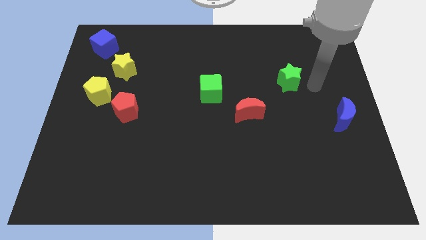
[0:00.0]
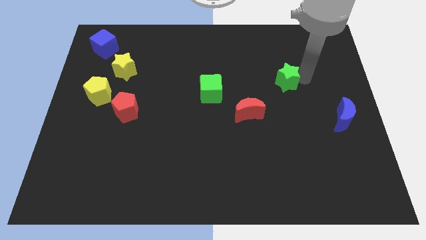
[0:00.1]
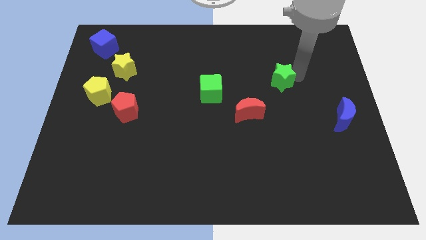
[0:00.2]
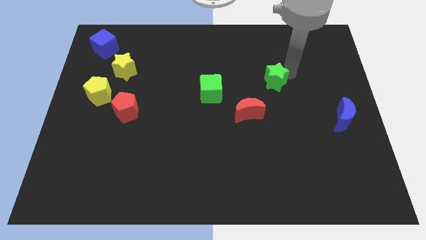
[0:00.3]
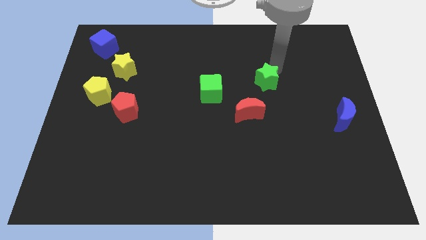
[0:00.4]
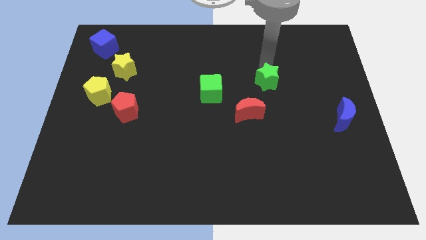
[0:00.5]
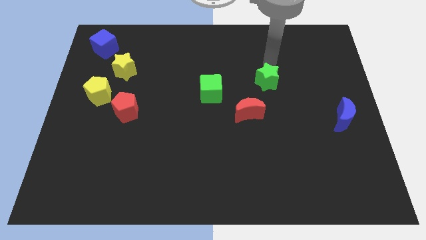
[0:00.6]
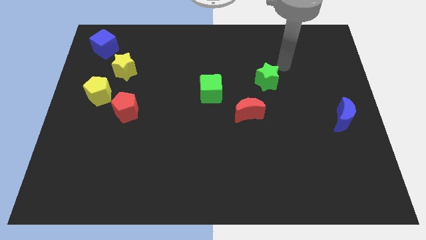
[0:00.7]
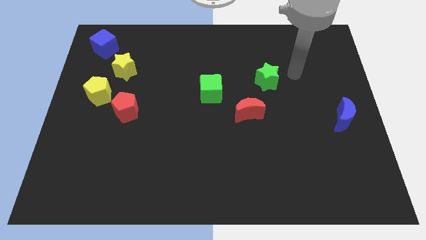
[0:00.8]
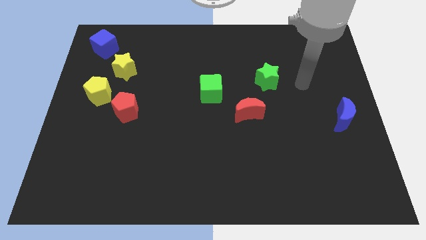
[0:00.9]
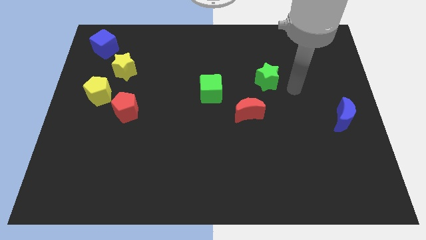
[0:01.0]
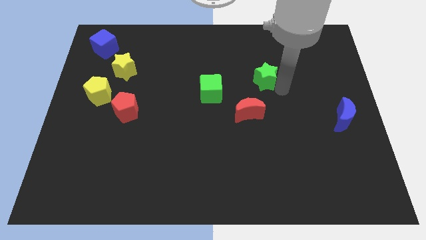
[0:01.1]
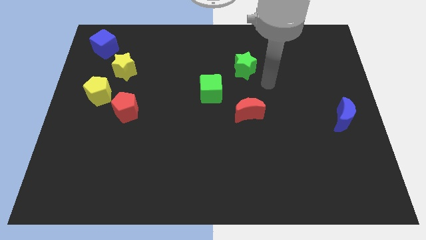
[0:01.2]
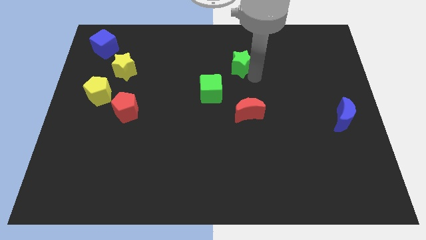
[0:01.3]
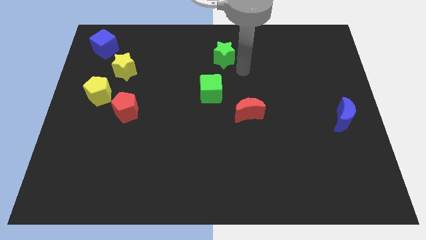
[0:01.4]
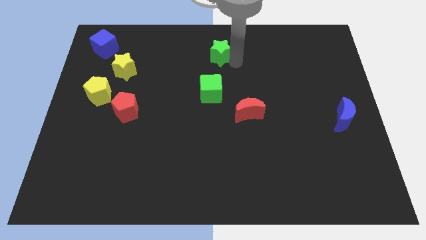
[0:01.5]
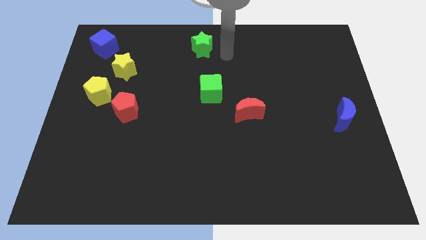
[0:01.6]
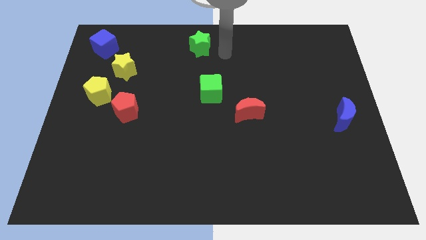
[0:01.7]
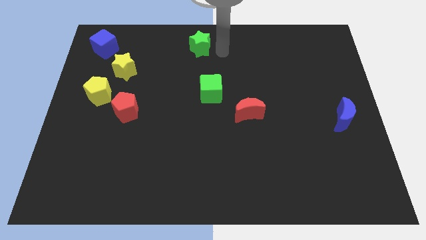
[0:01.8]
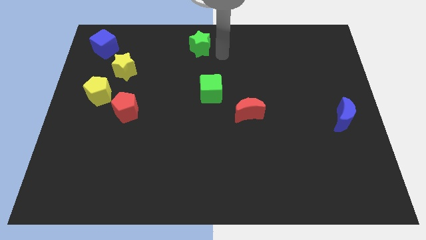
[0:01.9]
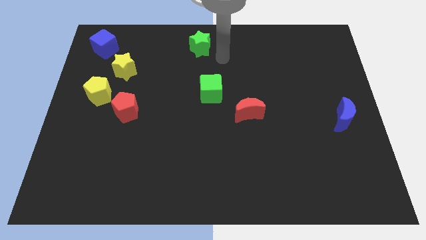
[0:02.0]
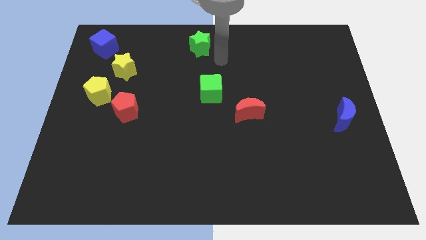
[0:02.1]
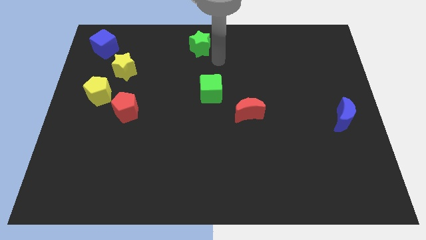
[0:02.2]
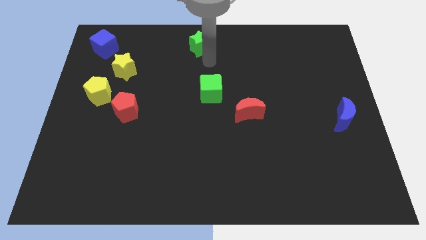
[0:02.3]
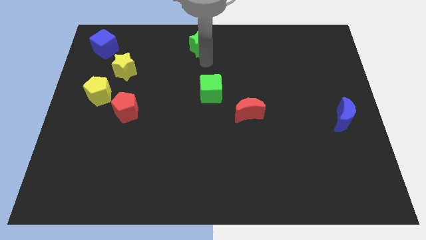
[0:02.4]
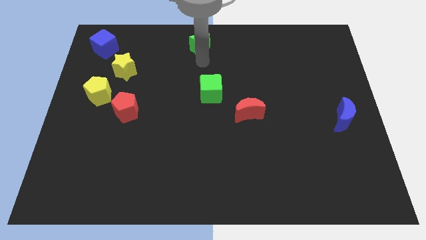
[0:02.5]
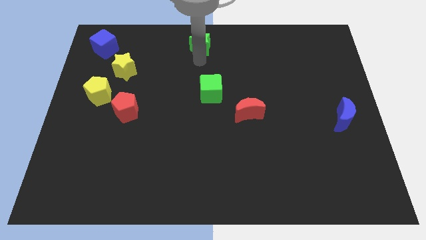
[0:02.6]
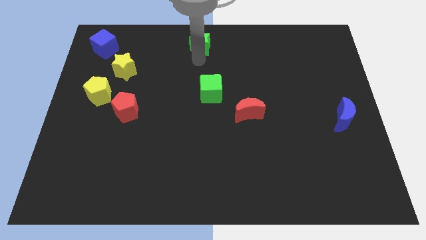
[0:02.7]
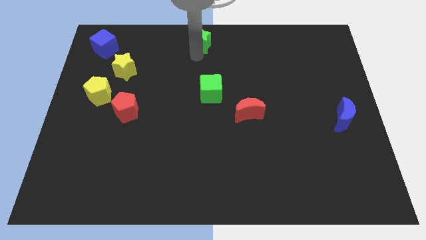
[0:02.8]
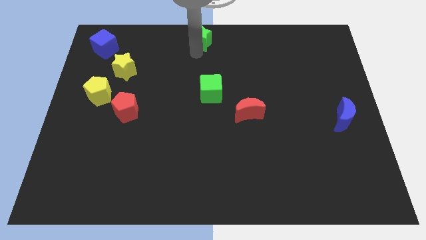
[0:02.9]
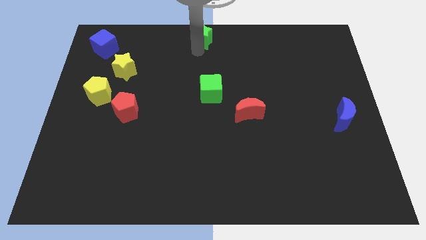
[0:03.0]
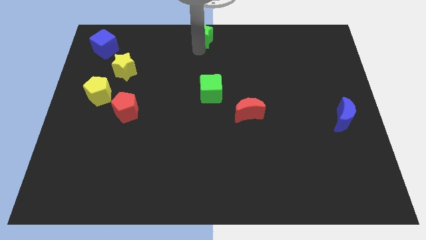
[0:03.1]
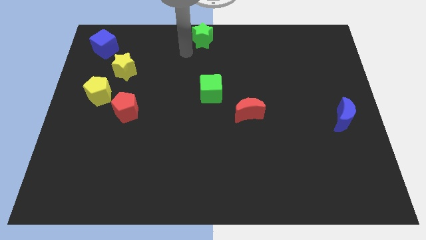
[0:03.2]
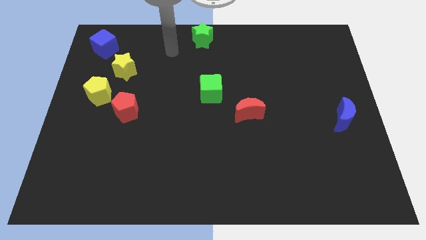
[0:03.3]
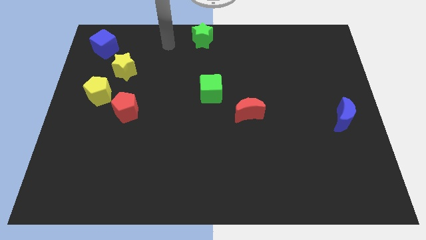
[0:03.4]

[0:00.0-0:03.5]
push green star towards top middle of the board

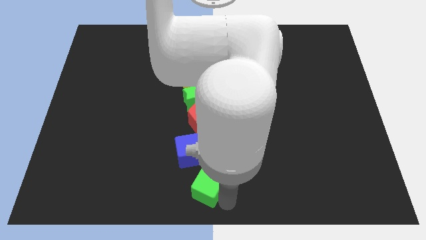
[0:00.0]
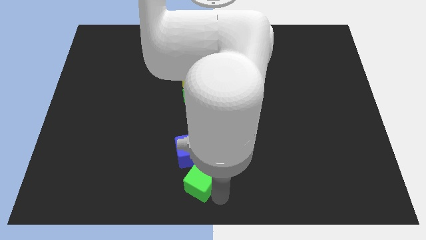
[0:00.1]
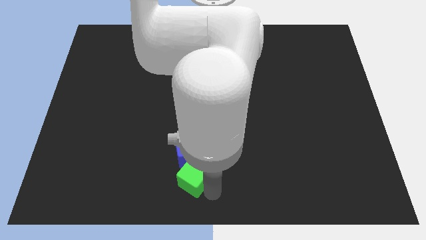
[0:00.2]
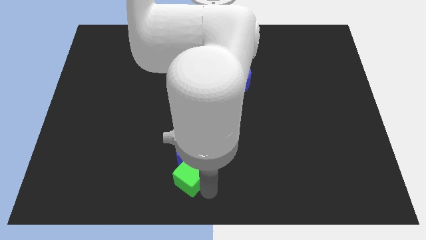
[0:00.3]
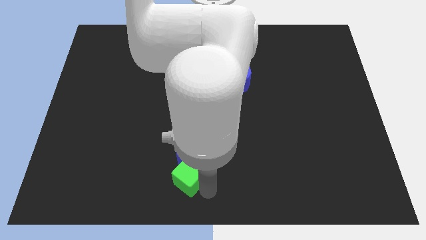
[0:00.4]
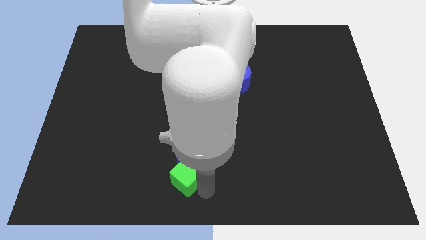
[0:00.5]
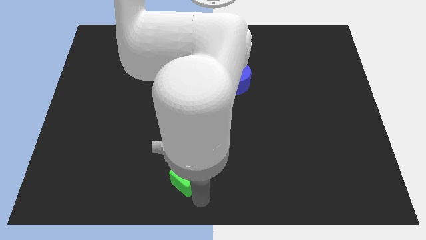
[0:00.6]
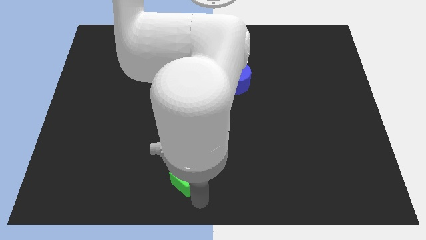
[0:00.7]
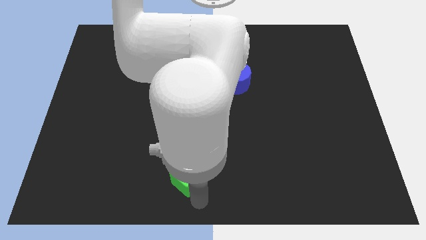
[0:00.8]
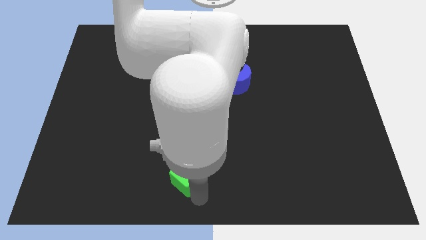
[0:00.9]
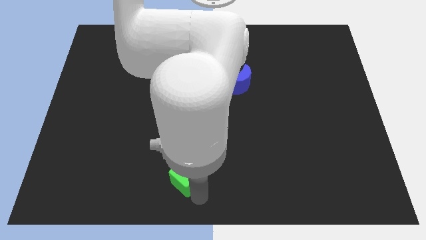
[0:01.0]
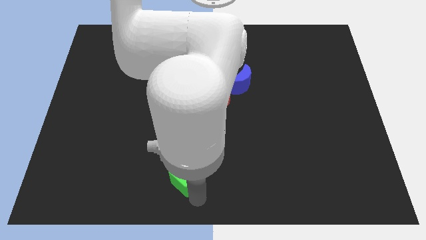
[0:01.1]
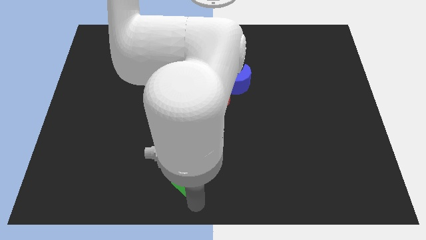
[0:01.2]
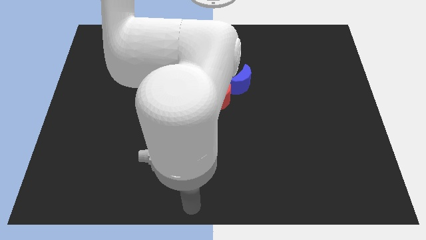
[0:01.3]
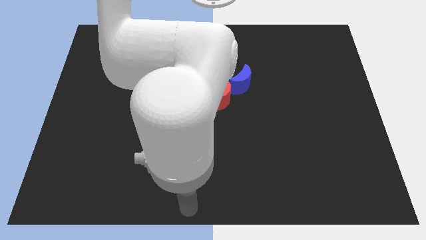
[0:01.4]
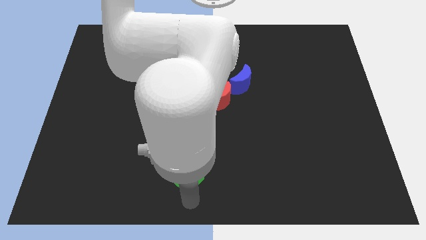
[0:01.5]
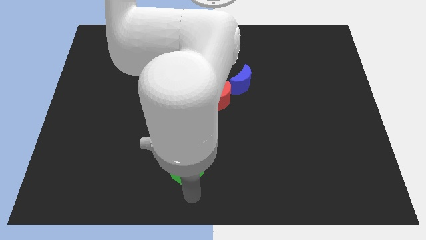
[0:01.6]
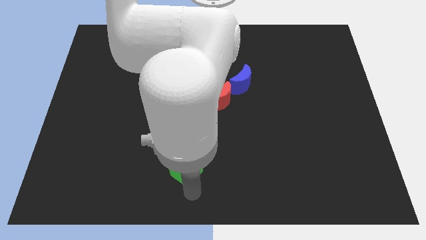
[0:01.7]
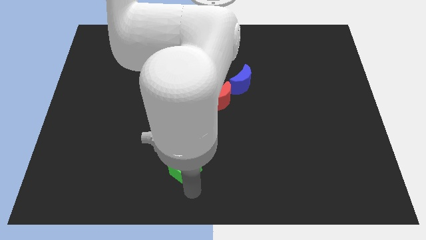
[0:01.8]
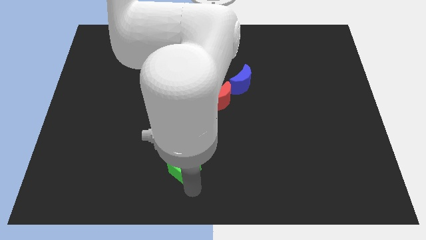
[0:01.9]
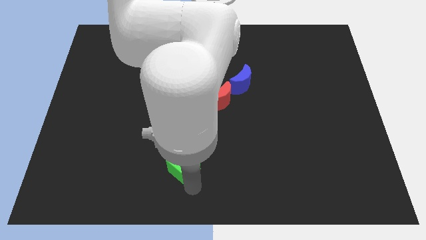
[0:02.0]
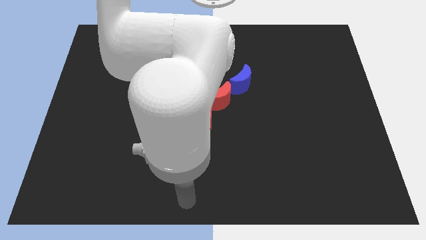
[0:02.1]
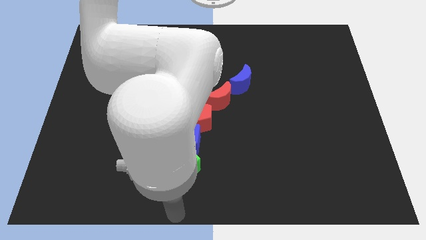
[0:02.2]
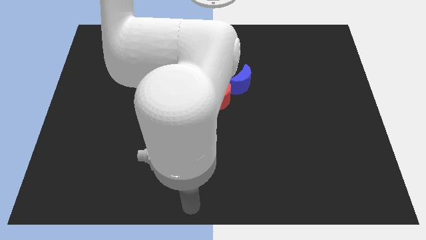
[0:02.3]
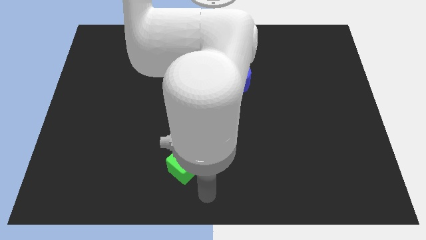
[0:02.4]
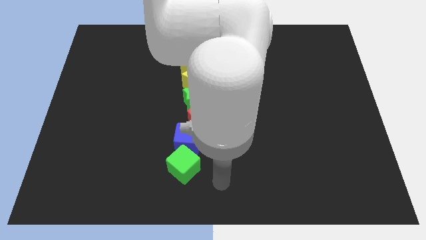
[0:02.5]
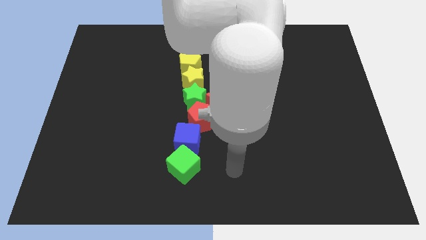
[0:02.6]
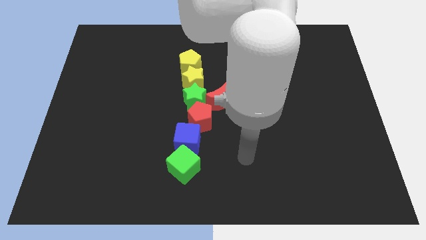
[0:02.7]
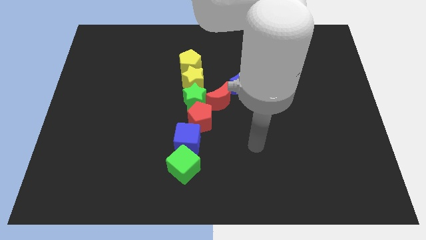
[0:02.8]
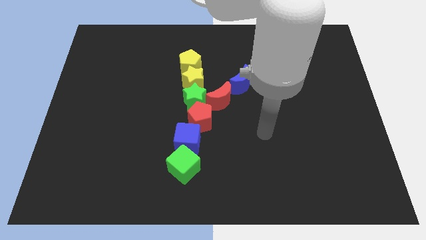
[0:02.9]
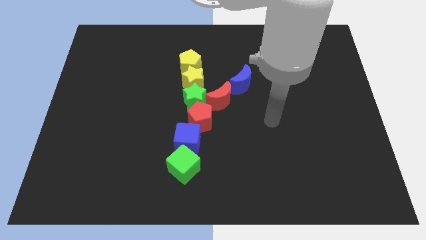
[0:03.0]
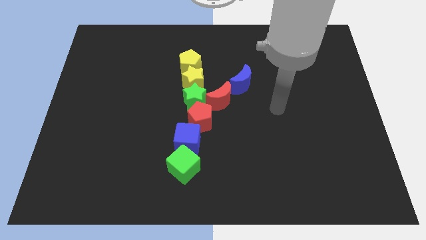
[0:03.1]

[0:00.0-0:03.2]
push the blue and green cubes towards the top side and move away

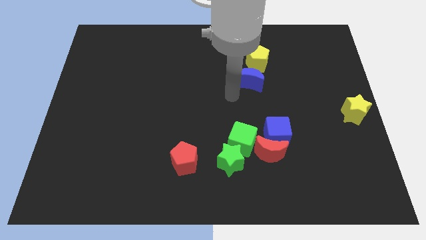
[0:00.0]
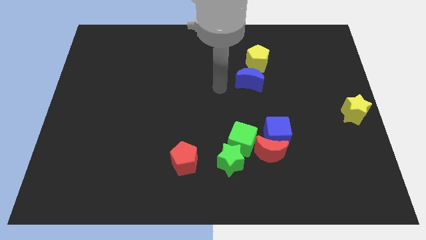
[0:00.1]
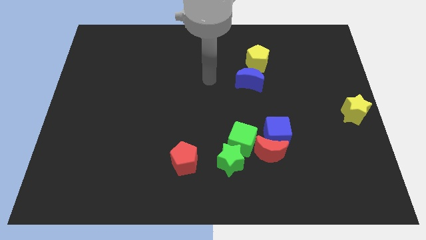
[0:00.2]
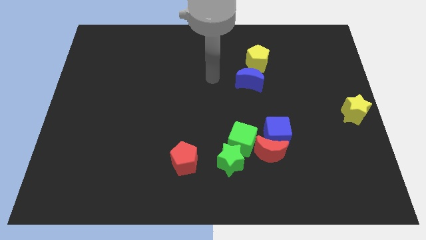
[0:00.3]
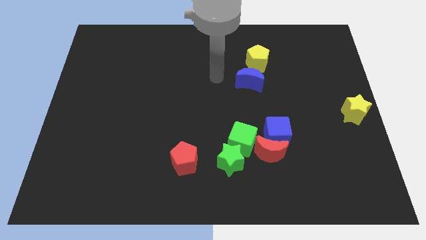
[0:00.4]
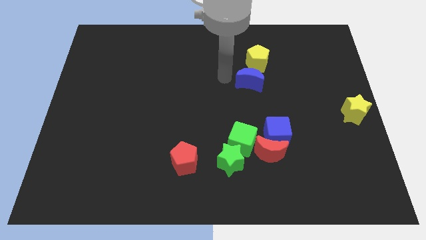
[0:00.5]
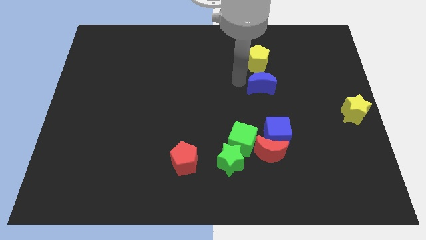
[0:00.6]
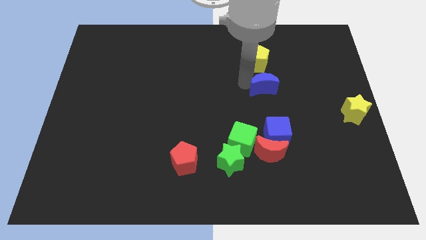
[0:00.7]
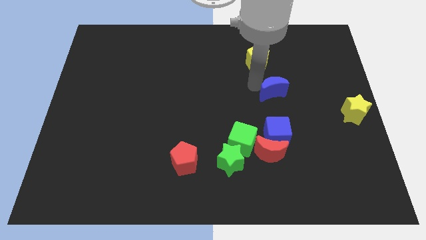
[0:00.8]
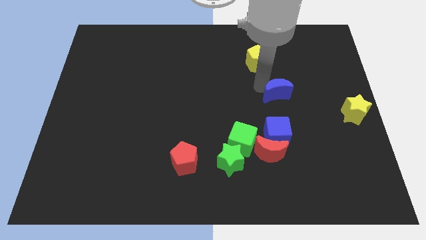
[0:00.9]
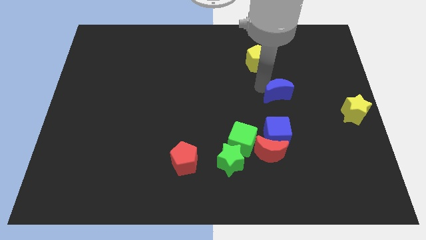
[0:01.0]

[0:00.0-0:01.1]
separate blue moon and yellow pentagon

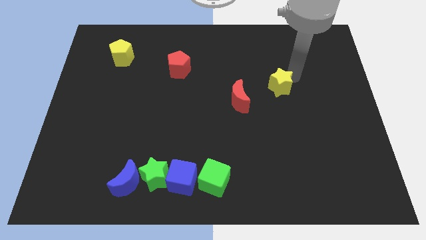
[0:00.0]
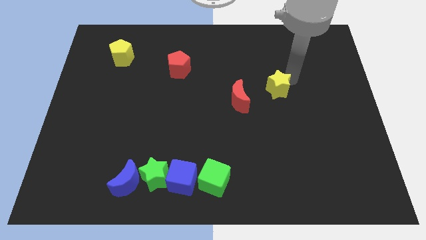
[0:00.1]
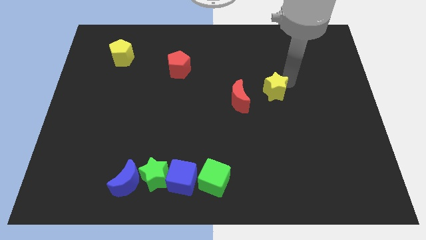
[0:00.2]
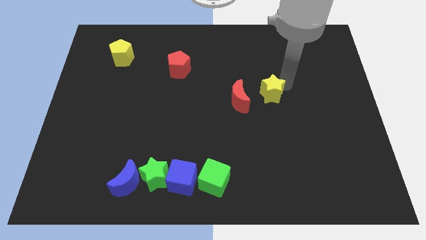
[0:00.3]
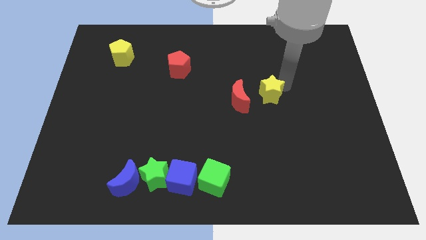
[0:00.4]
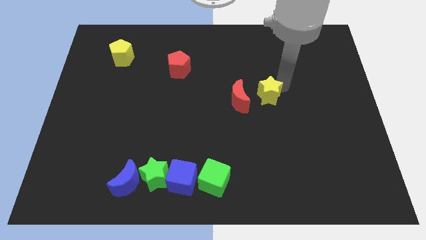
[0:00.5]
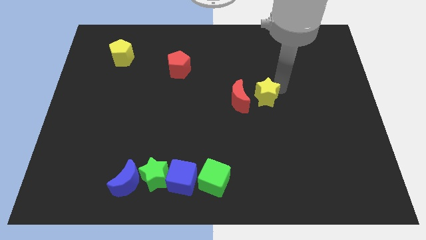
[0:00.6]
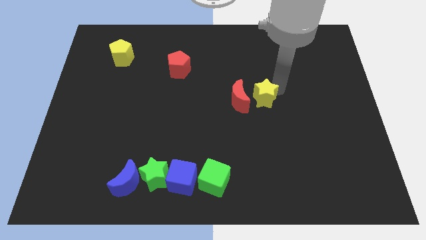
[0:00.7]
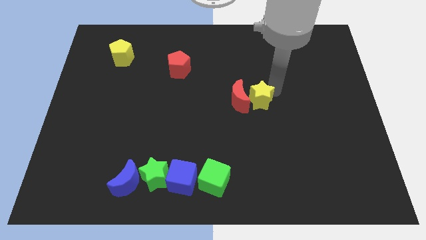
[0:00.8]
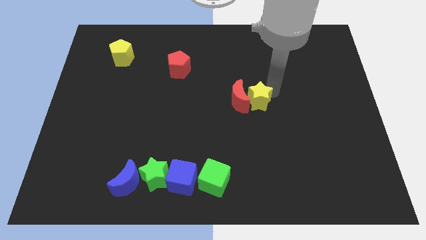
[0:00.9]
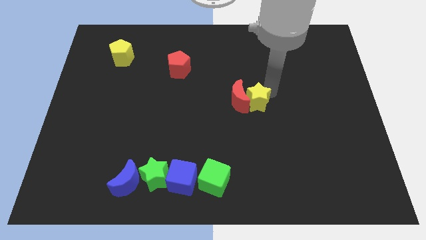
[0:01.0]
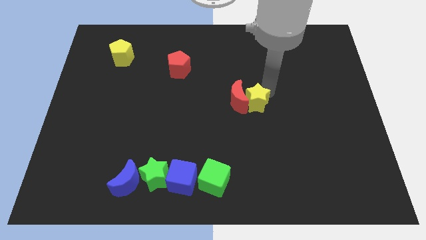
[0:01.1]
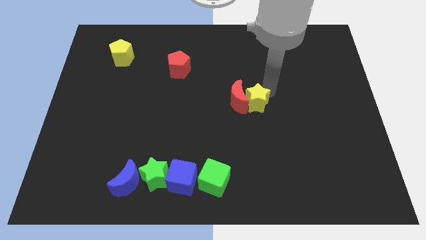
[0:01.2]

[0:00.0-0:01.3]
move the yellow star into the red crescent
